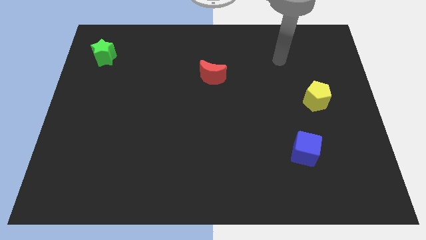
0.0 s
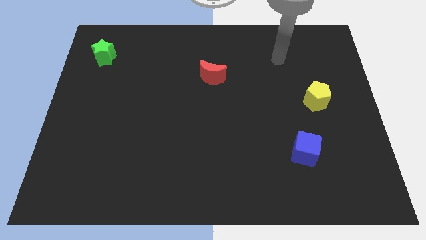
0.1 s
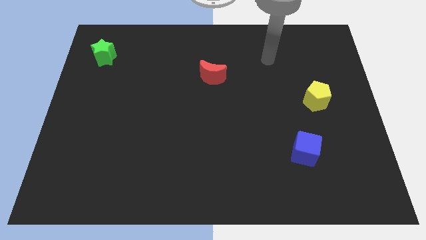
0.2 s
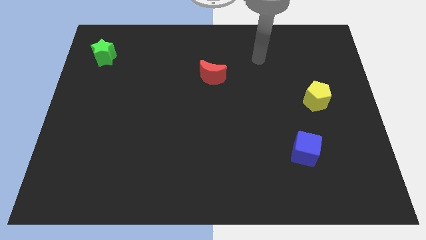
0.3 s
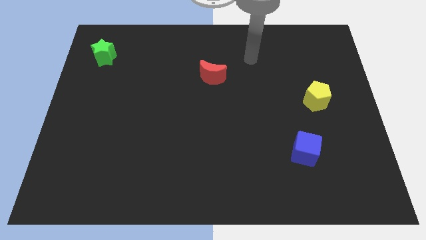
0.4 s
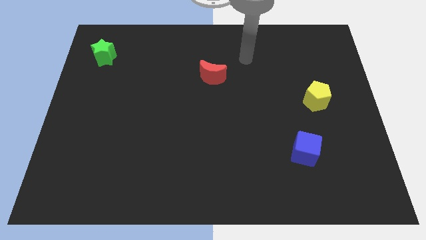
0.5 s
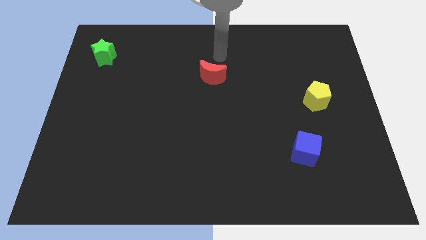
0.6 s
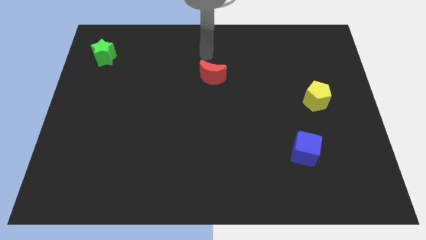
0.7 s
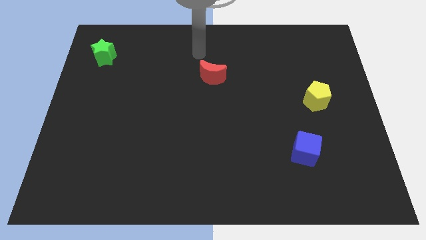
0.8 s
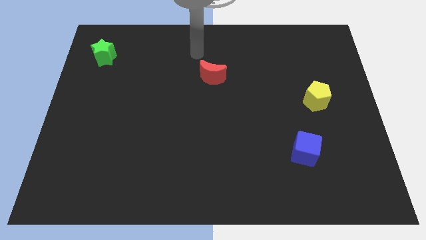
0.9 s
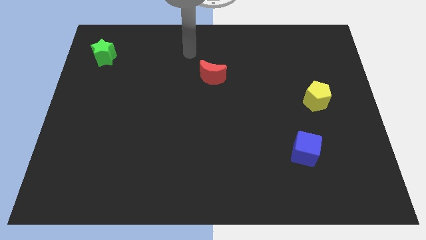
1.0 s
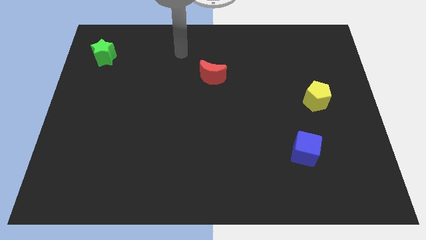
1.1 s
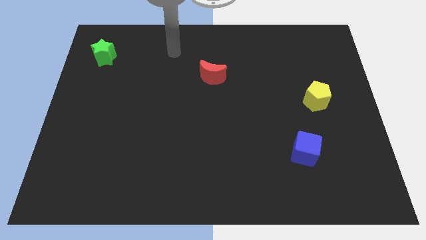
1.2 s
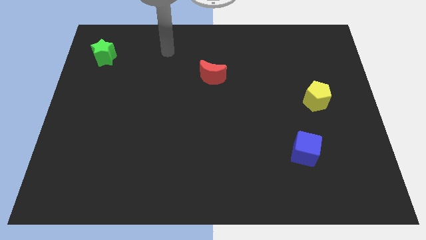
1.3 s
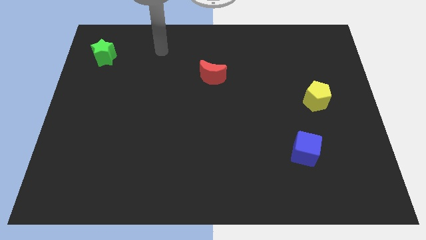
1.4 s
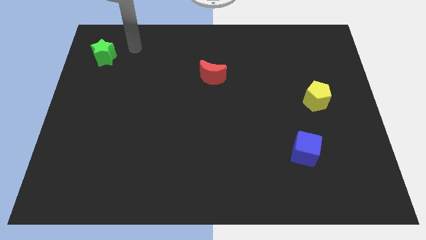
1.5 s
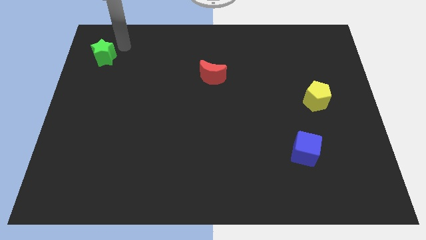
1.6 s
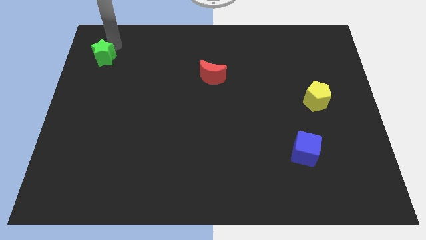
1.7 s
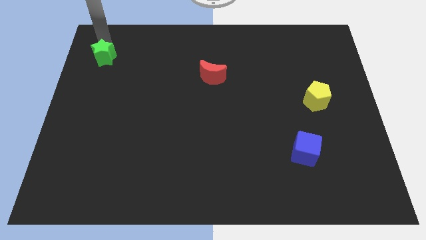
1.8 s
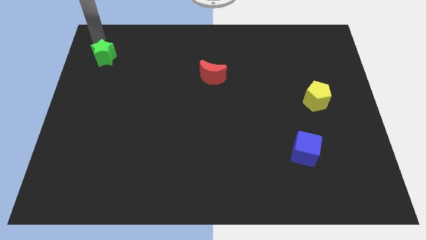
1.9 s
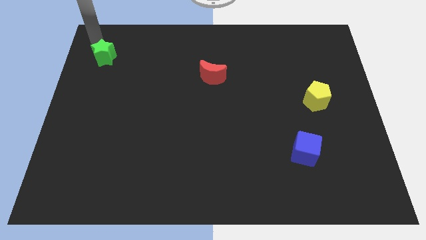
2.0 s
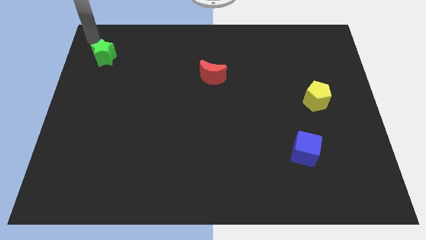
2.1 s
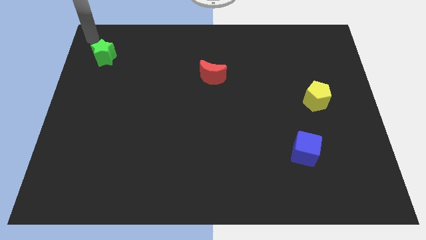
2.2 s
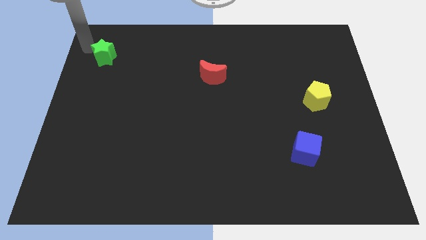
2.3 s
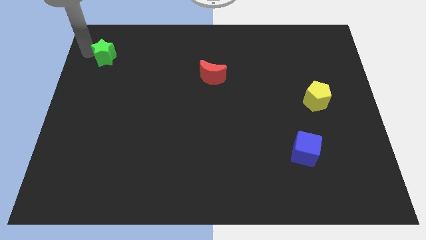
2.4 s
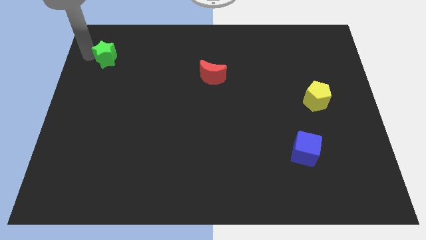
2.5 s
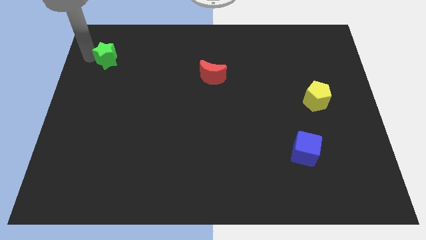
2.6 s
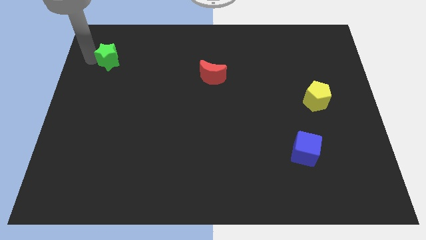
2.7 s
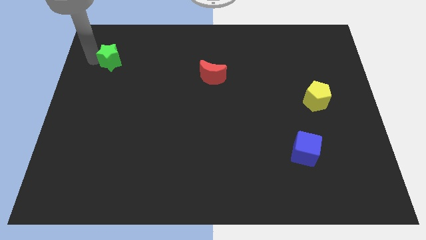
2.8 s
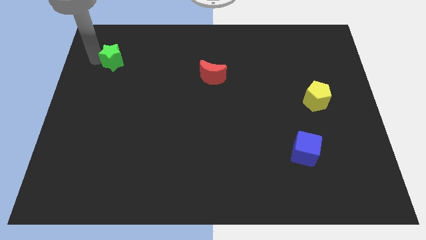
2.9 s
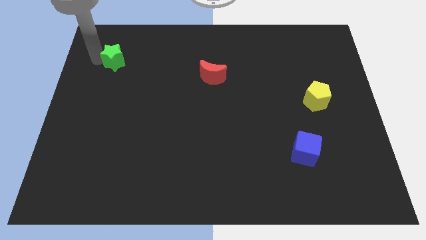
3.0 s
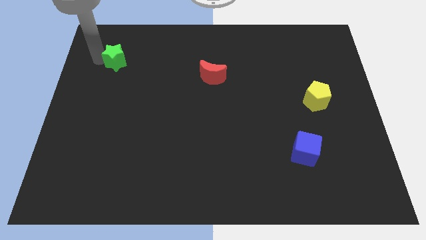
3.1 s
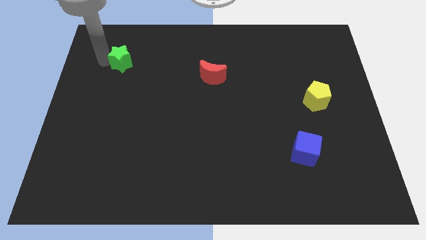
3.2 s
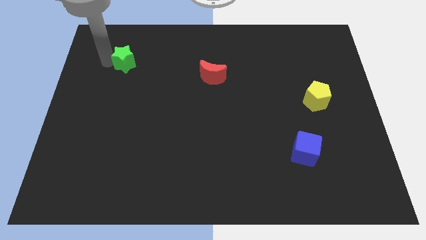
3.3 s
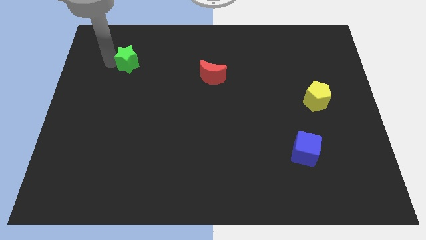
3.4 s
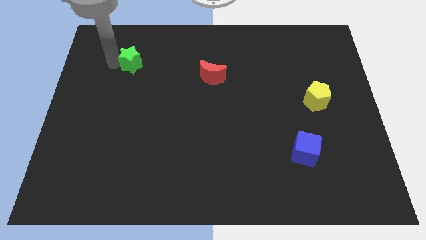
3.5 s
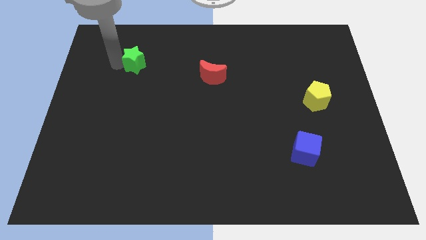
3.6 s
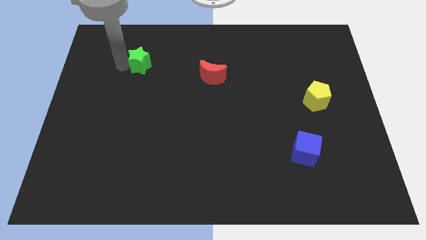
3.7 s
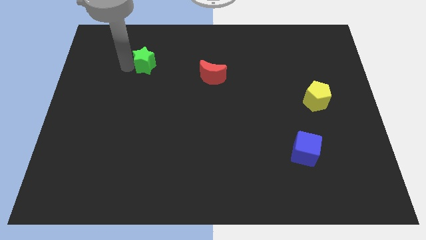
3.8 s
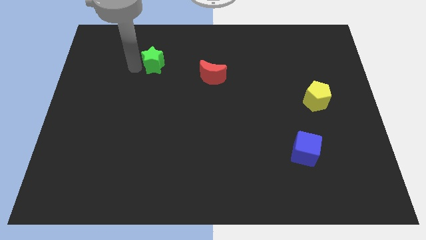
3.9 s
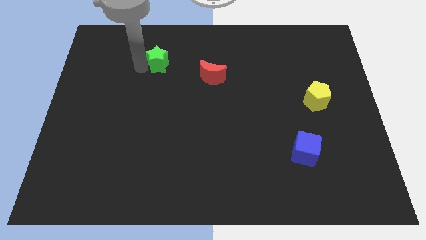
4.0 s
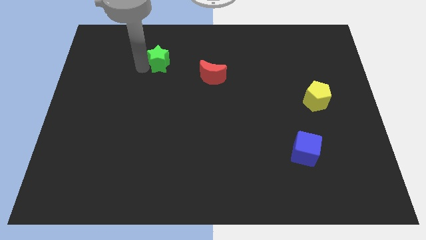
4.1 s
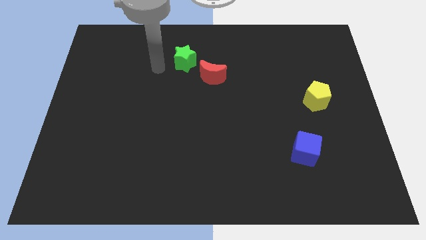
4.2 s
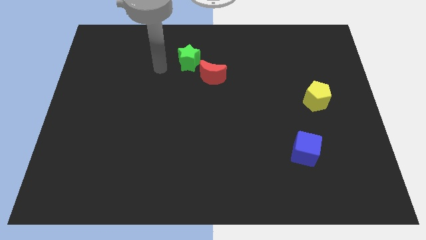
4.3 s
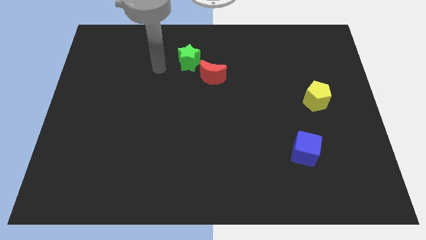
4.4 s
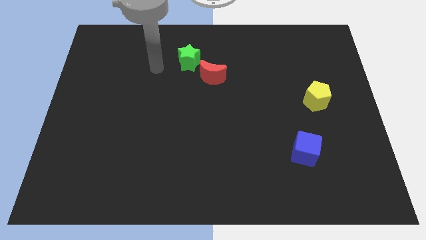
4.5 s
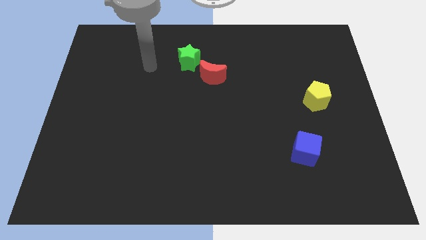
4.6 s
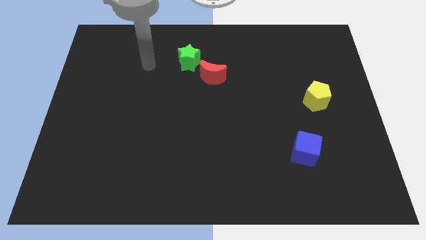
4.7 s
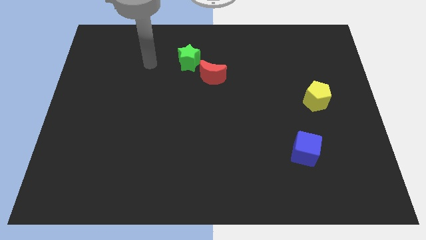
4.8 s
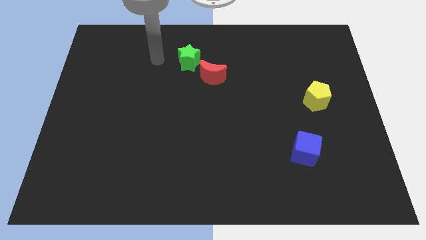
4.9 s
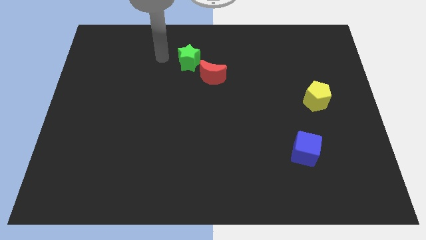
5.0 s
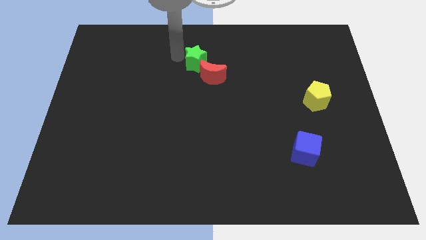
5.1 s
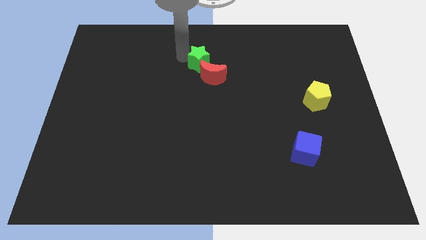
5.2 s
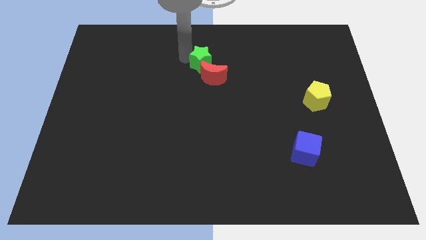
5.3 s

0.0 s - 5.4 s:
move the green block towards the red moon

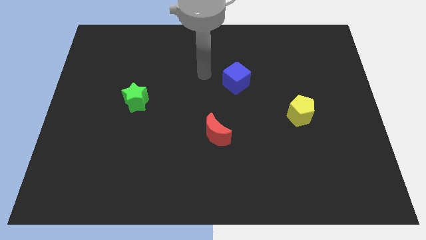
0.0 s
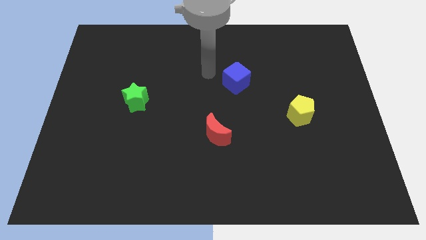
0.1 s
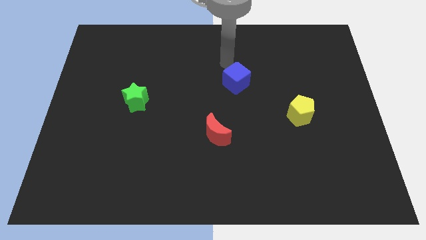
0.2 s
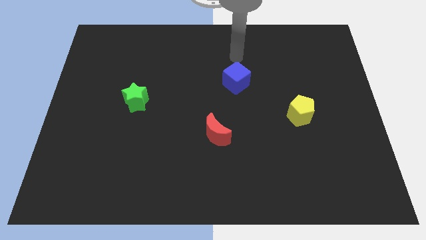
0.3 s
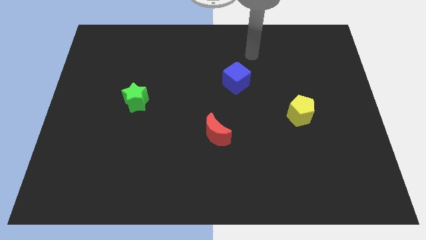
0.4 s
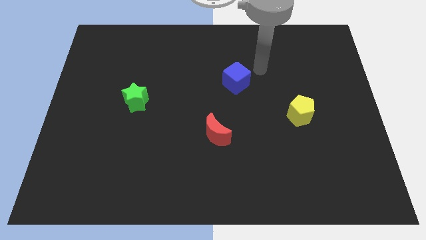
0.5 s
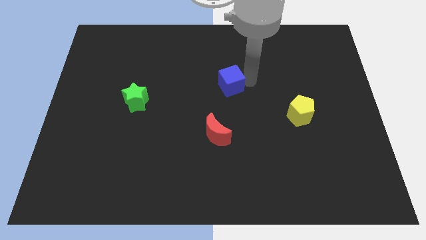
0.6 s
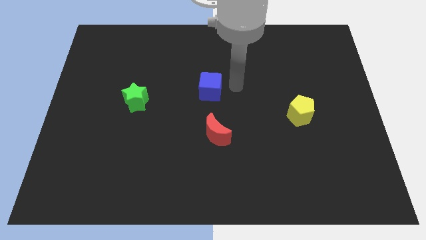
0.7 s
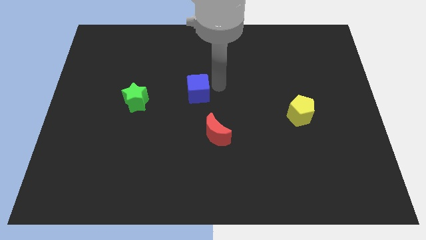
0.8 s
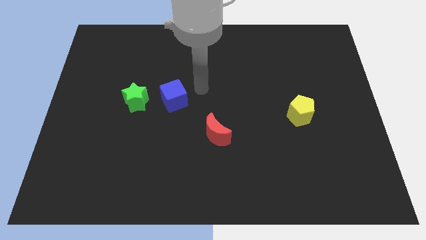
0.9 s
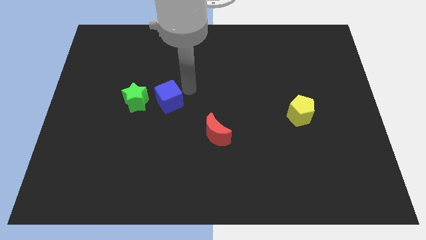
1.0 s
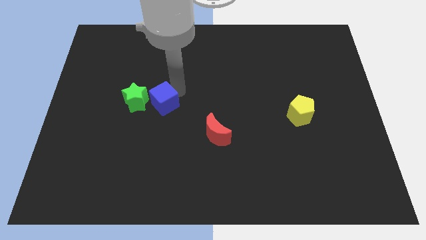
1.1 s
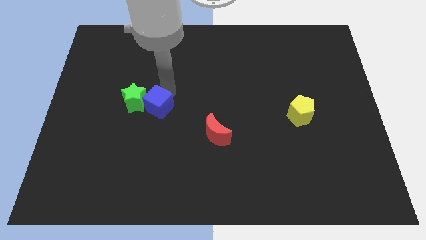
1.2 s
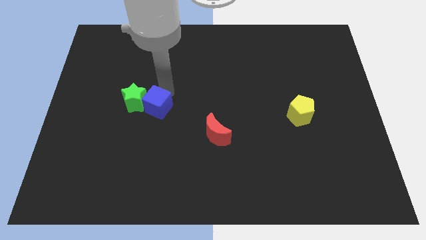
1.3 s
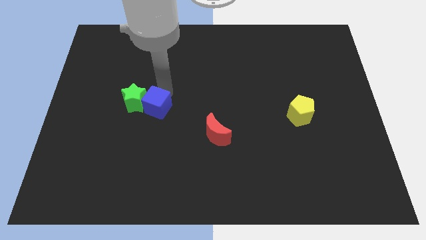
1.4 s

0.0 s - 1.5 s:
put the blue cube to the star

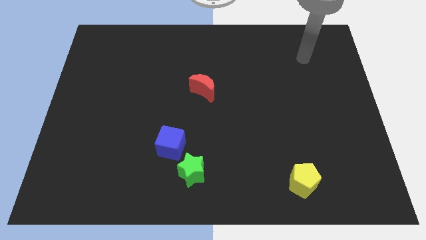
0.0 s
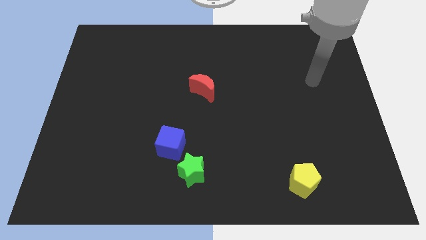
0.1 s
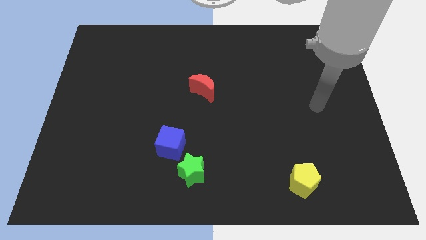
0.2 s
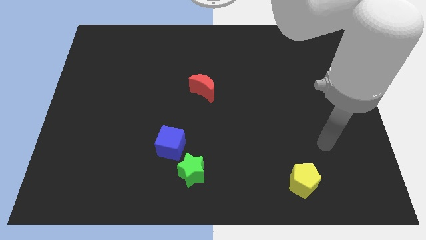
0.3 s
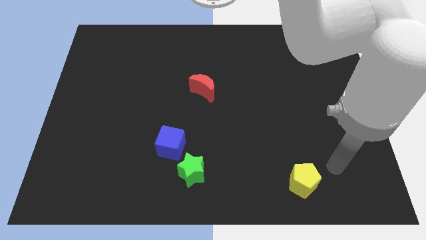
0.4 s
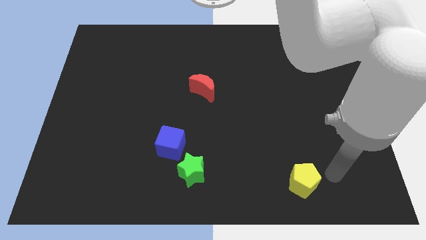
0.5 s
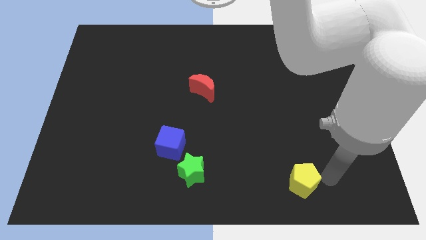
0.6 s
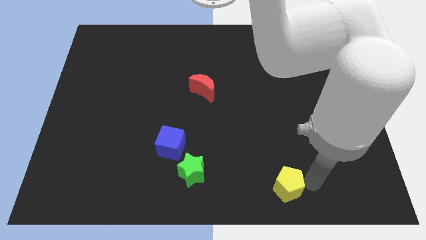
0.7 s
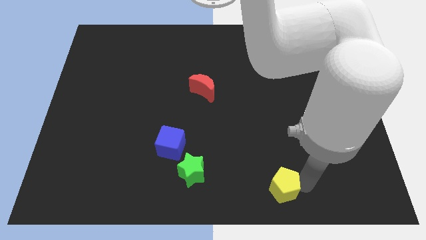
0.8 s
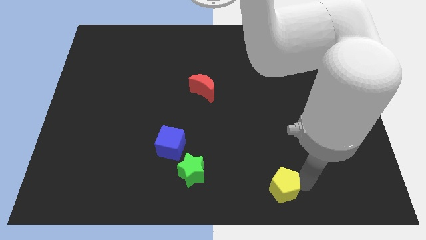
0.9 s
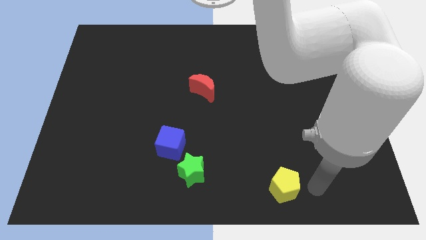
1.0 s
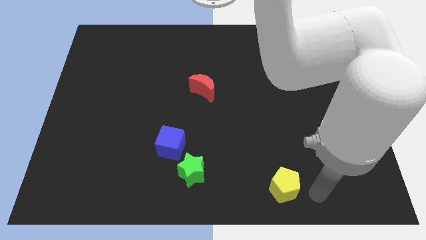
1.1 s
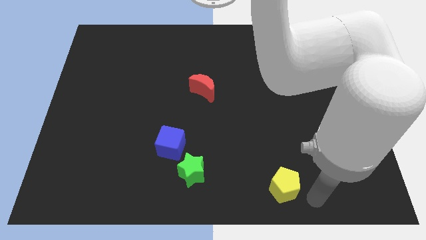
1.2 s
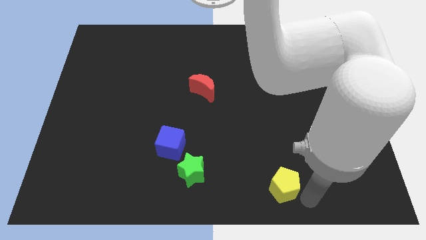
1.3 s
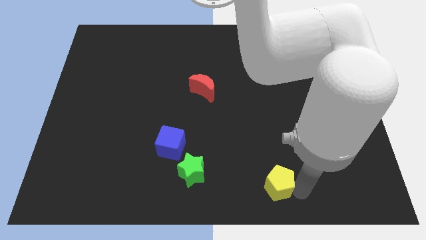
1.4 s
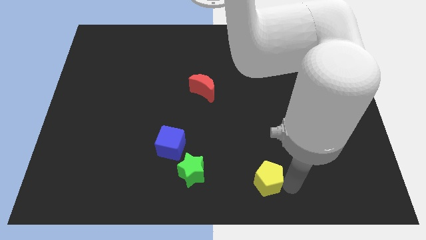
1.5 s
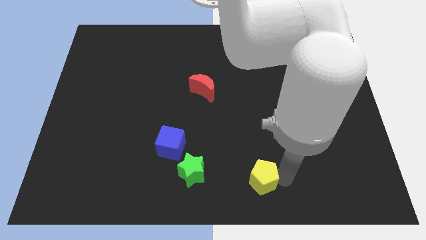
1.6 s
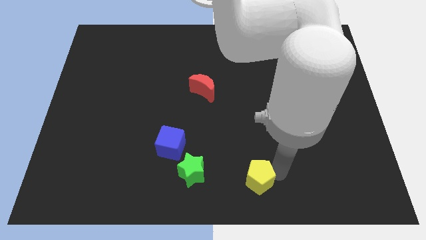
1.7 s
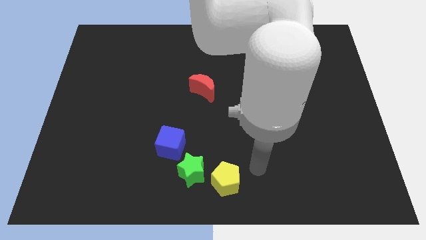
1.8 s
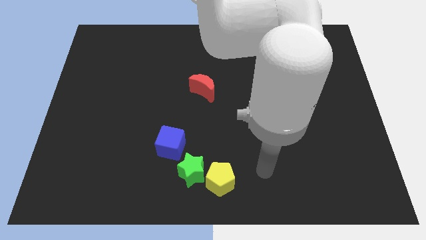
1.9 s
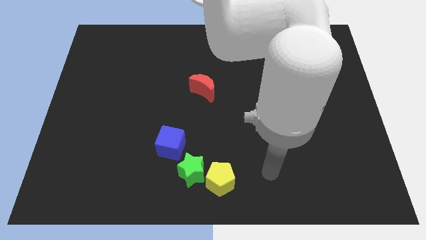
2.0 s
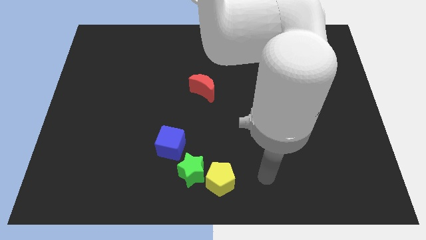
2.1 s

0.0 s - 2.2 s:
slide the yellow pentagon to the star
